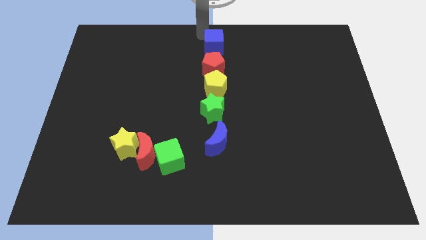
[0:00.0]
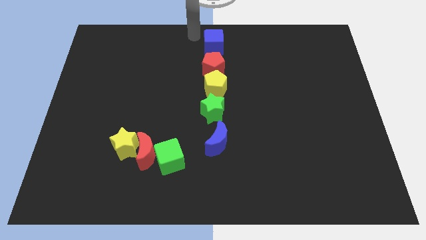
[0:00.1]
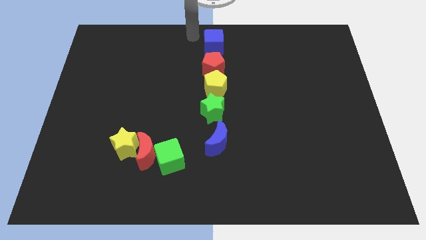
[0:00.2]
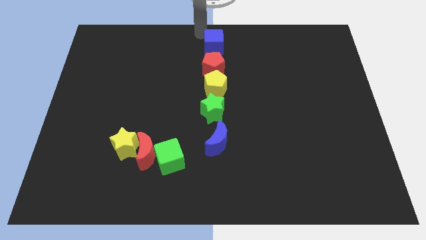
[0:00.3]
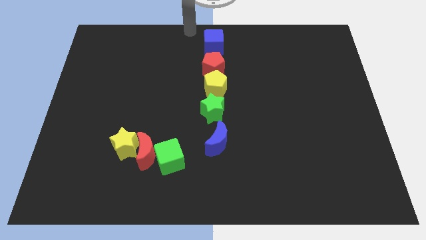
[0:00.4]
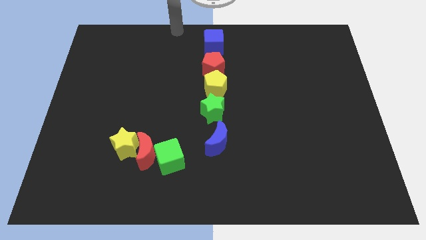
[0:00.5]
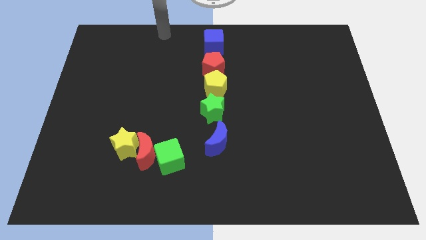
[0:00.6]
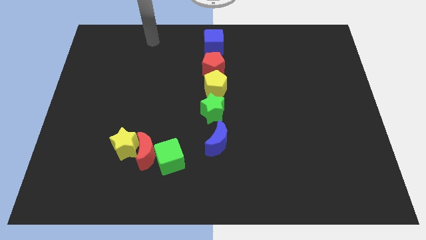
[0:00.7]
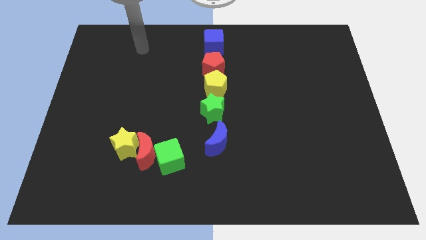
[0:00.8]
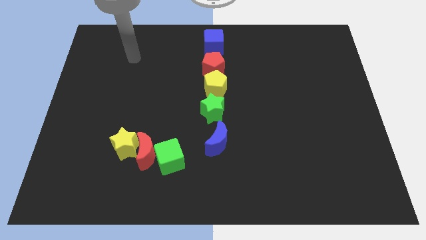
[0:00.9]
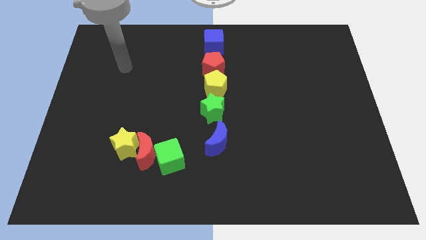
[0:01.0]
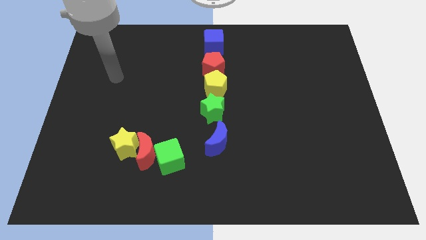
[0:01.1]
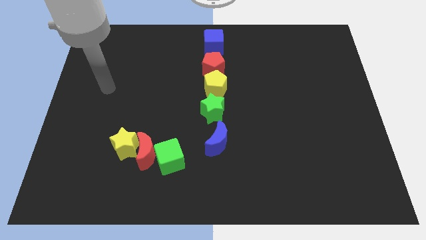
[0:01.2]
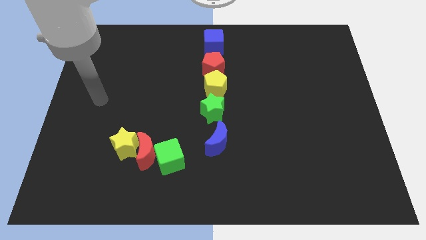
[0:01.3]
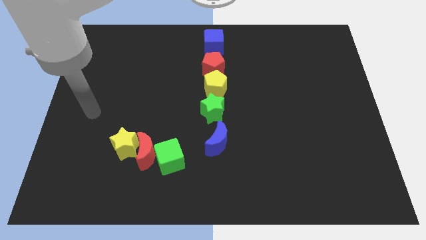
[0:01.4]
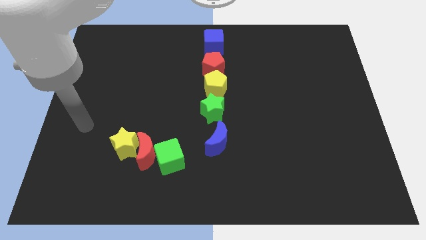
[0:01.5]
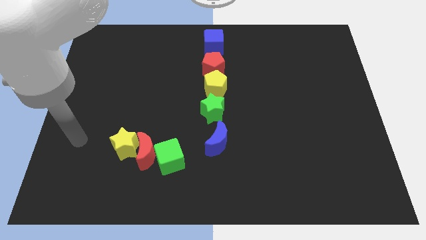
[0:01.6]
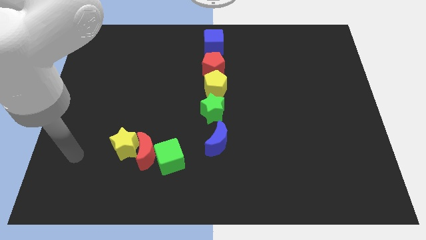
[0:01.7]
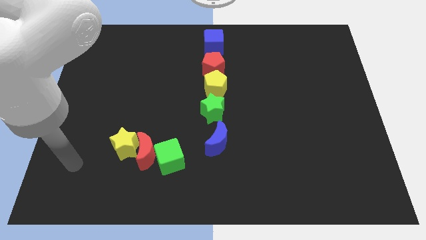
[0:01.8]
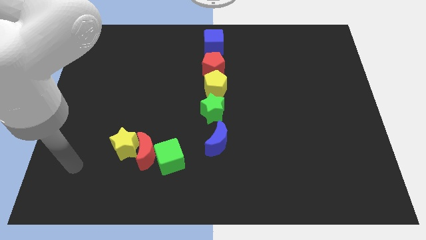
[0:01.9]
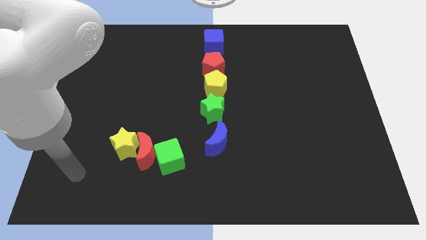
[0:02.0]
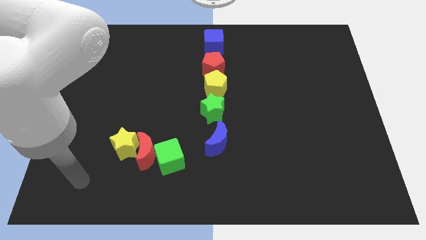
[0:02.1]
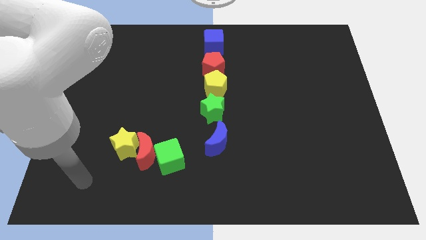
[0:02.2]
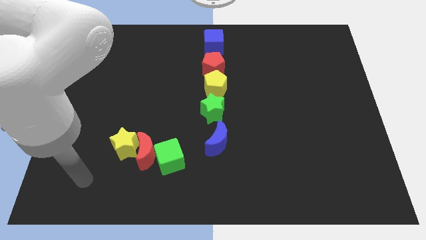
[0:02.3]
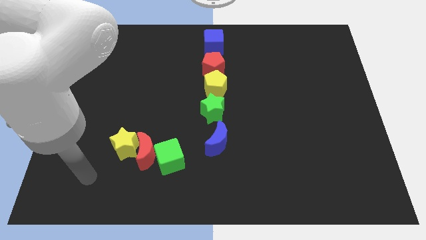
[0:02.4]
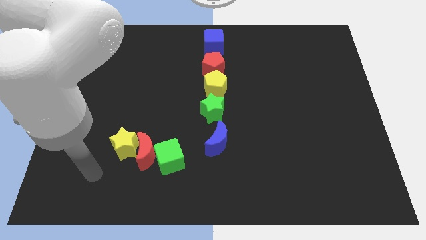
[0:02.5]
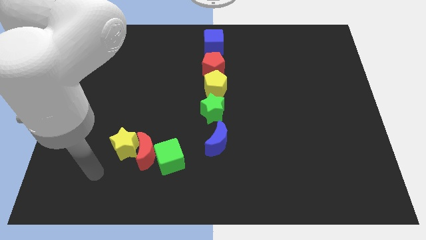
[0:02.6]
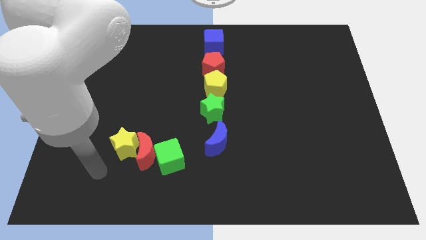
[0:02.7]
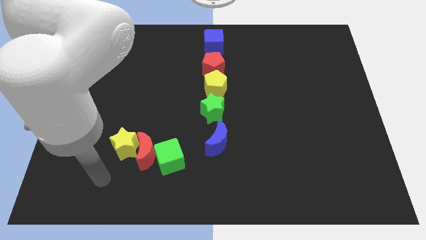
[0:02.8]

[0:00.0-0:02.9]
move your hand to the bottom

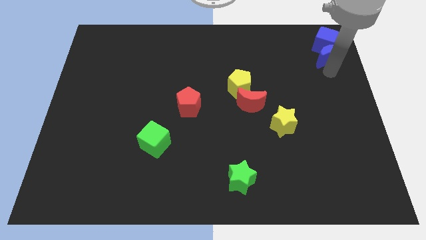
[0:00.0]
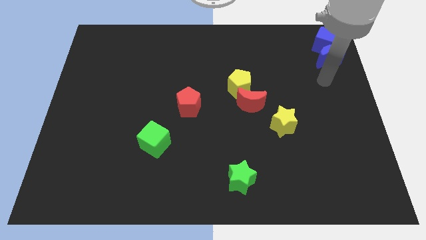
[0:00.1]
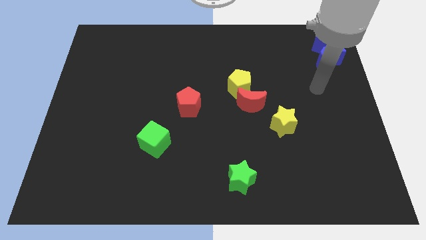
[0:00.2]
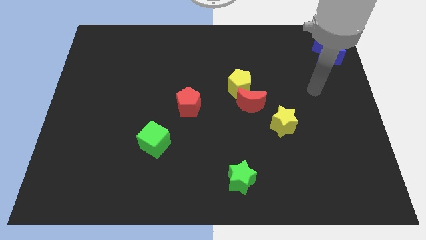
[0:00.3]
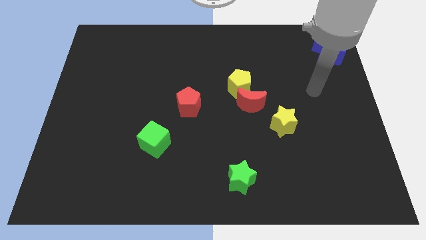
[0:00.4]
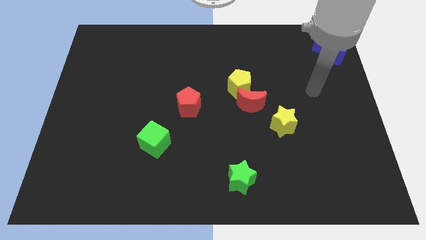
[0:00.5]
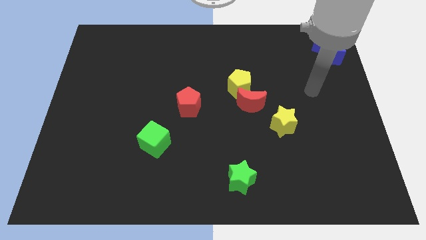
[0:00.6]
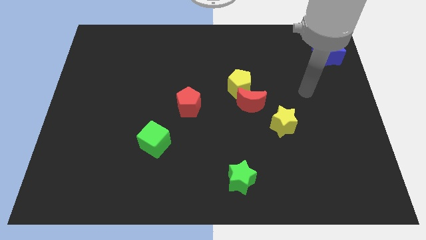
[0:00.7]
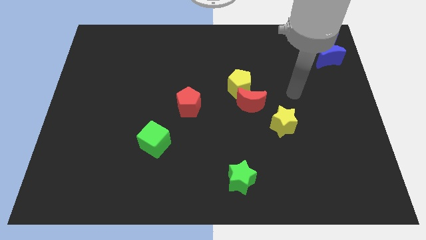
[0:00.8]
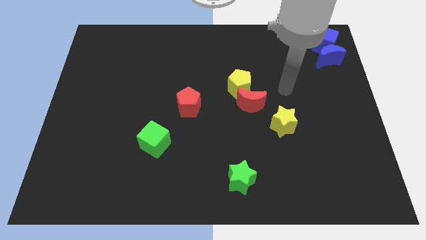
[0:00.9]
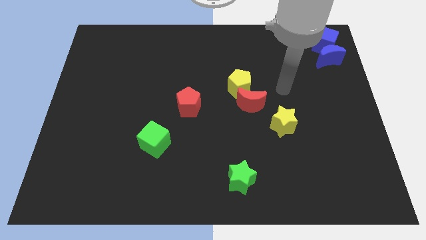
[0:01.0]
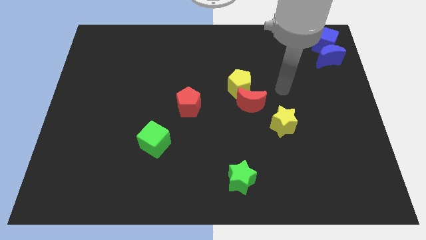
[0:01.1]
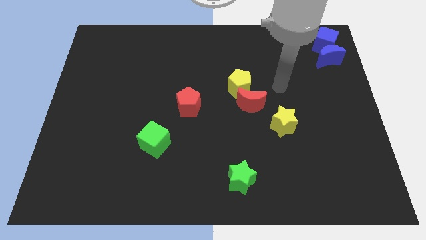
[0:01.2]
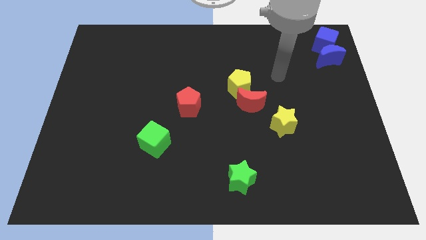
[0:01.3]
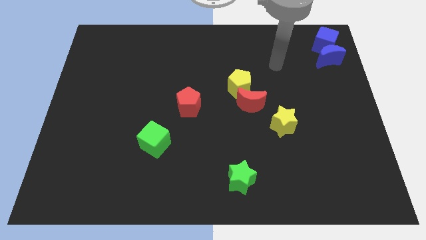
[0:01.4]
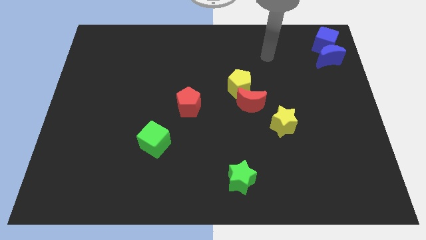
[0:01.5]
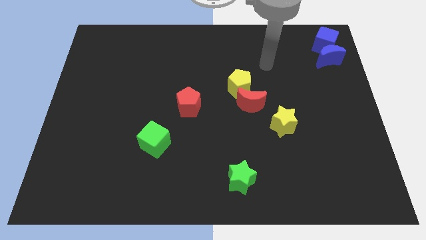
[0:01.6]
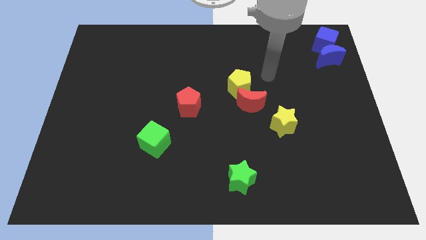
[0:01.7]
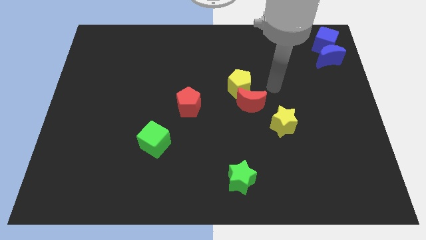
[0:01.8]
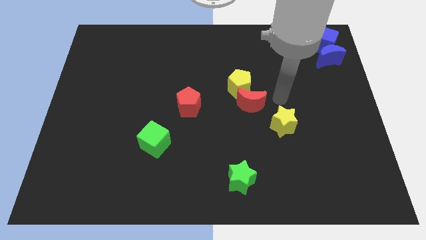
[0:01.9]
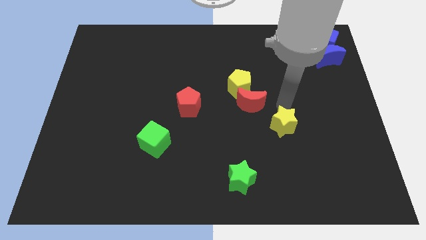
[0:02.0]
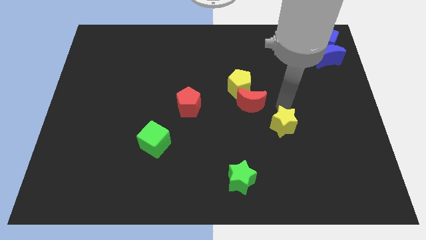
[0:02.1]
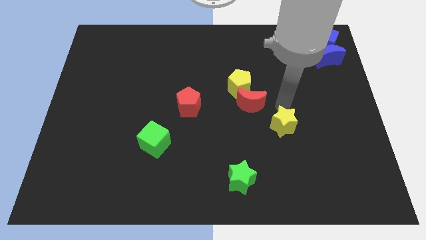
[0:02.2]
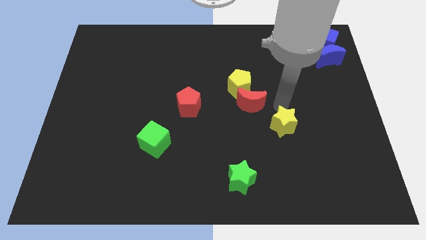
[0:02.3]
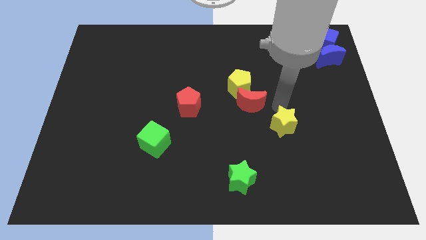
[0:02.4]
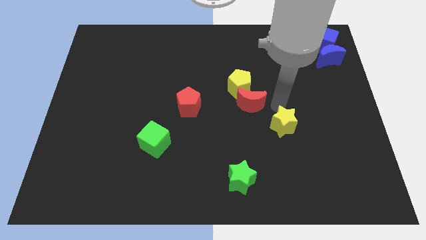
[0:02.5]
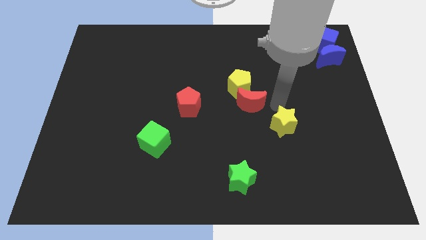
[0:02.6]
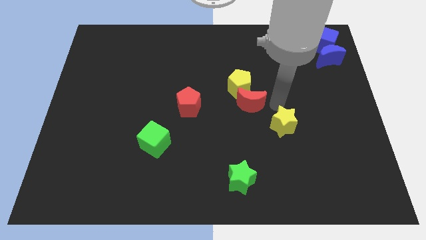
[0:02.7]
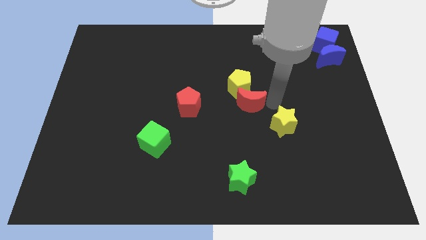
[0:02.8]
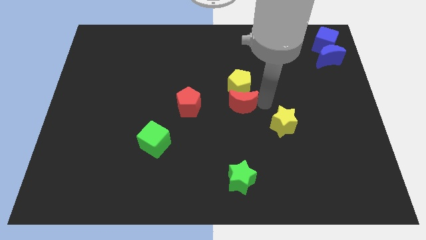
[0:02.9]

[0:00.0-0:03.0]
move your arm towards the red crescent

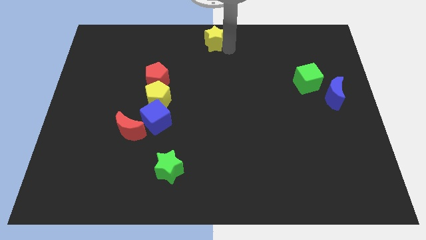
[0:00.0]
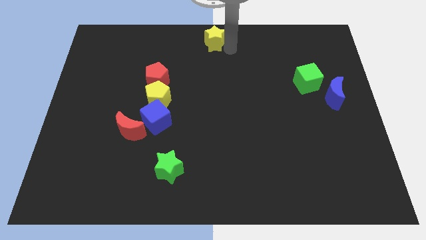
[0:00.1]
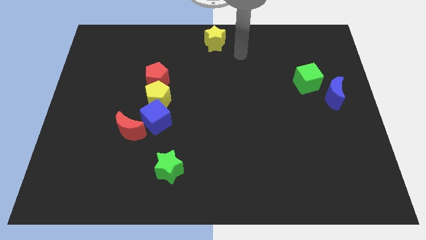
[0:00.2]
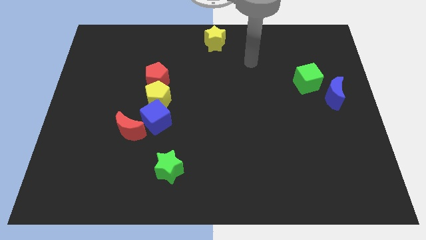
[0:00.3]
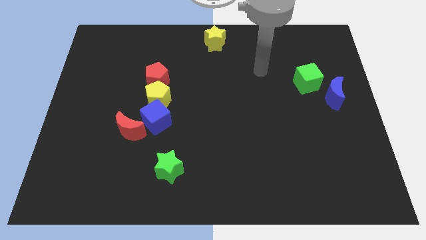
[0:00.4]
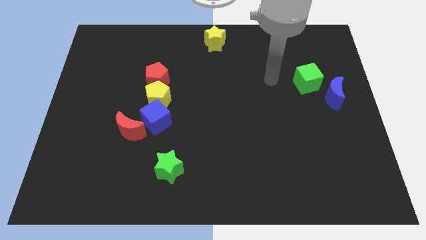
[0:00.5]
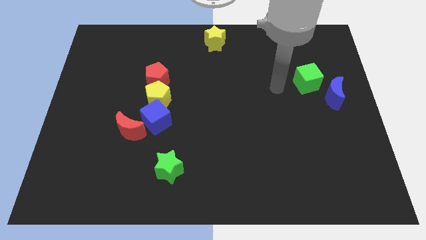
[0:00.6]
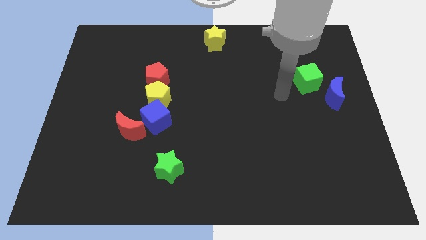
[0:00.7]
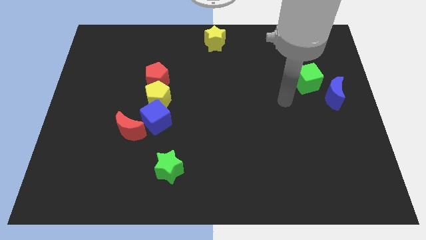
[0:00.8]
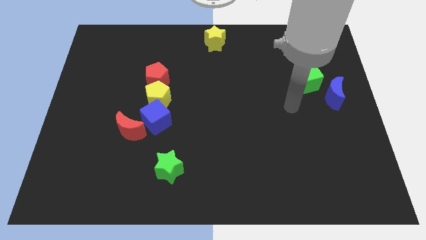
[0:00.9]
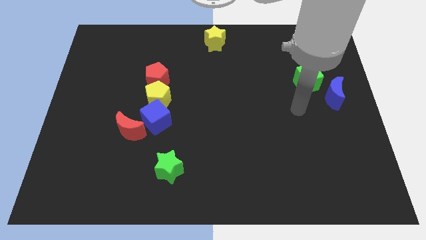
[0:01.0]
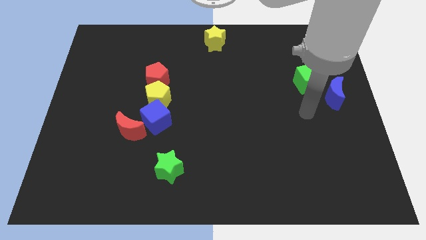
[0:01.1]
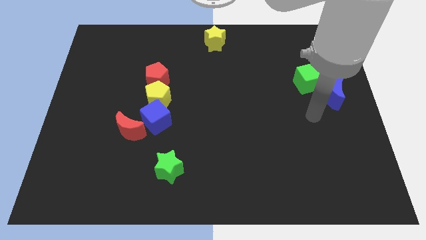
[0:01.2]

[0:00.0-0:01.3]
move your arm away from the yellow star

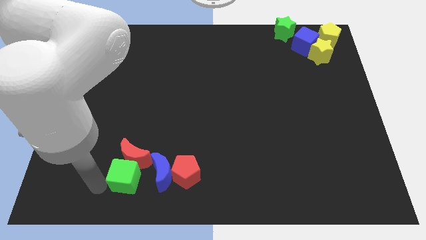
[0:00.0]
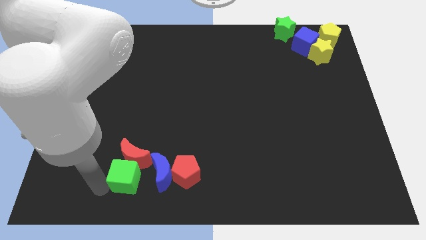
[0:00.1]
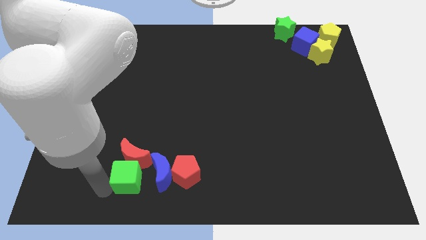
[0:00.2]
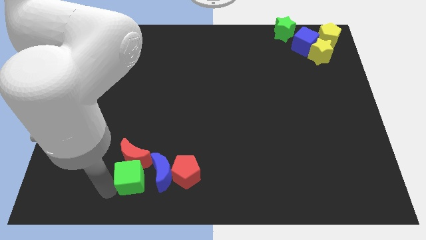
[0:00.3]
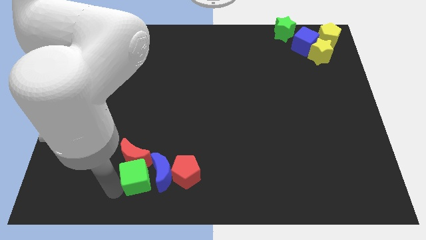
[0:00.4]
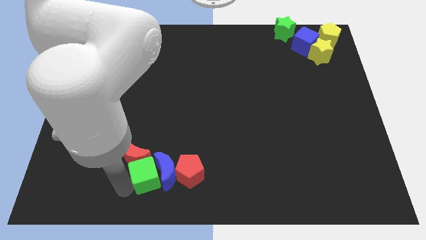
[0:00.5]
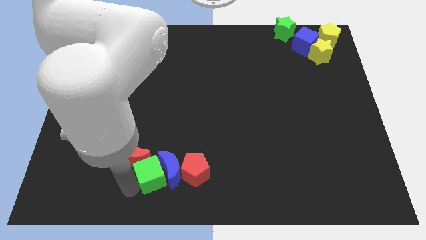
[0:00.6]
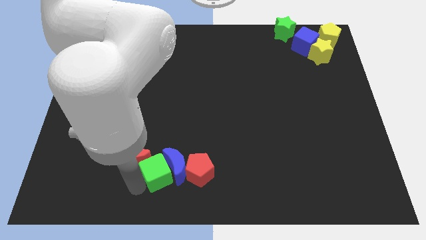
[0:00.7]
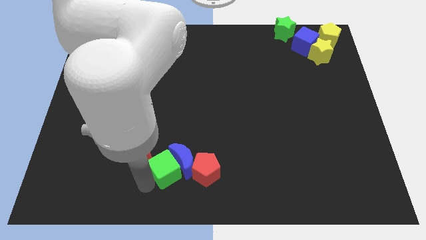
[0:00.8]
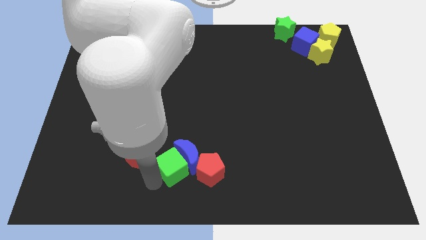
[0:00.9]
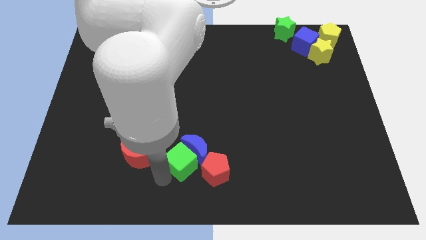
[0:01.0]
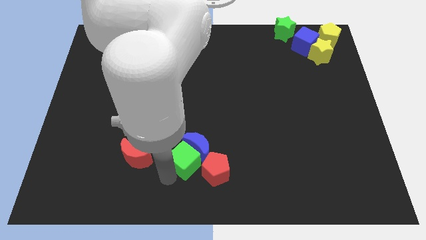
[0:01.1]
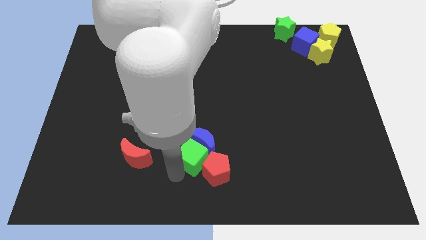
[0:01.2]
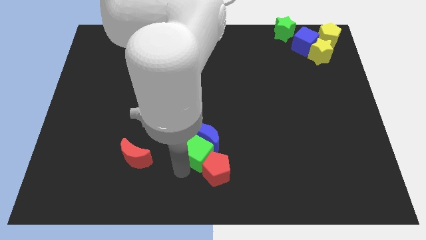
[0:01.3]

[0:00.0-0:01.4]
push the green cube below the blue crescent

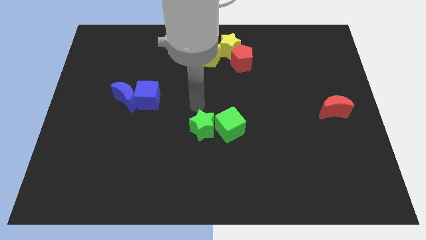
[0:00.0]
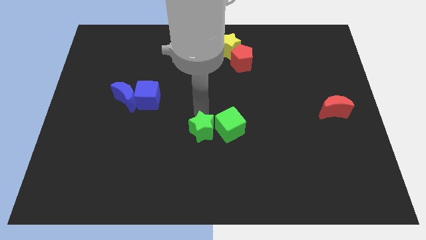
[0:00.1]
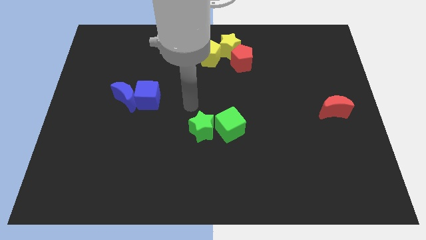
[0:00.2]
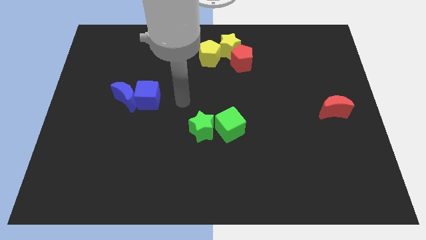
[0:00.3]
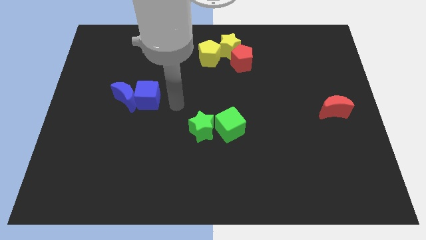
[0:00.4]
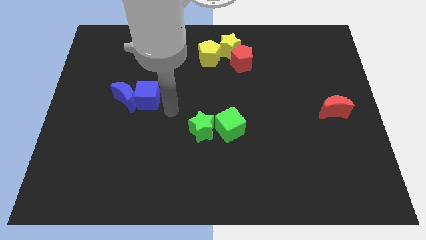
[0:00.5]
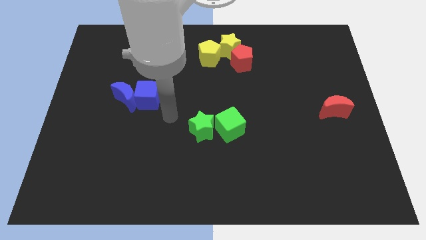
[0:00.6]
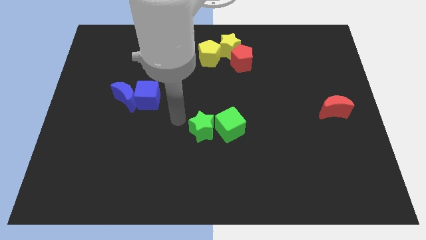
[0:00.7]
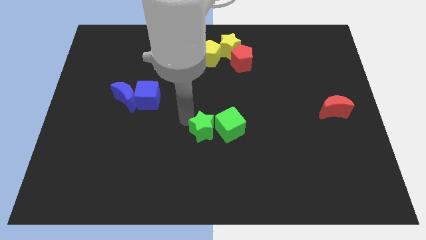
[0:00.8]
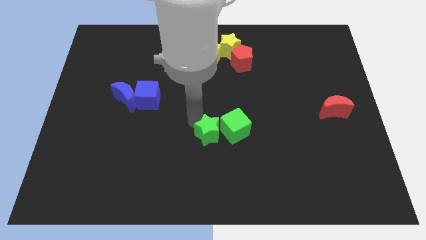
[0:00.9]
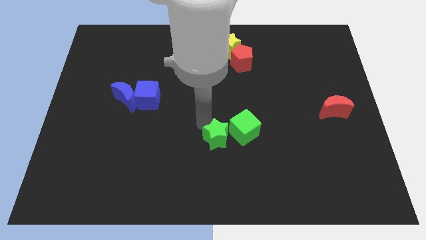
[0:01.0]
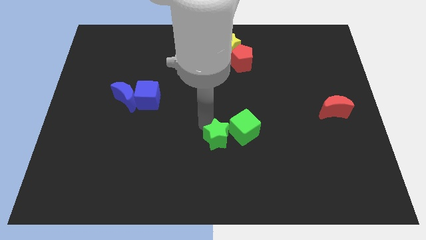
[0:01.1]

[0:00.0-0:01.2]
slightly move the group of green blocks to the bottom
